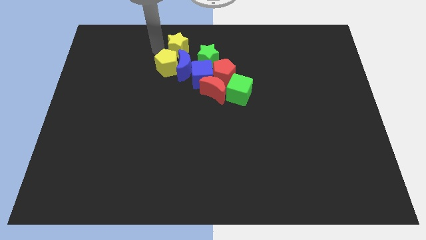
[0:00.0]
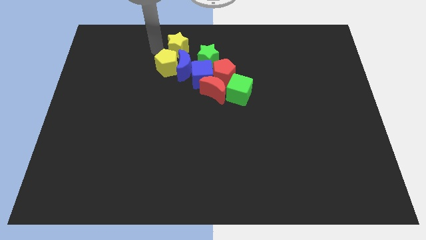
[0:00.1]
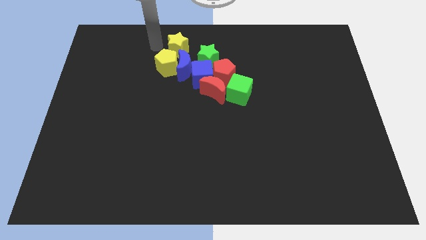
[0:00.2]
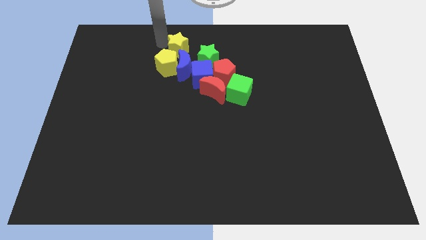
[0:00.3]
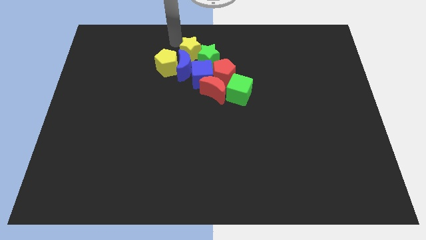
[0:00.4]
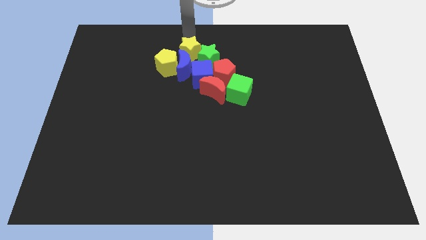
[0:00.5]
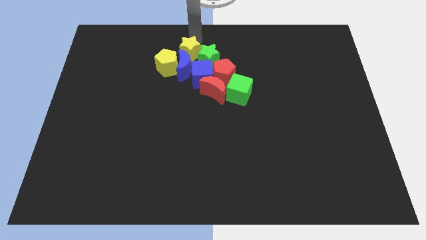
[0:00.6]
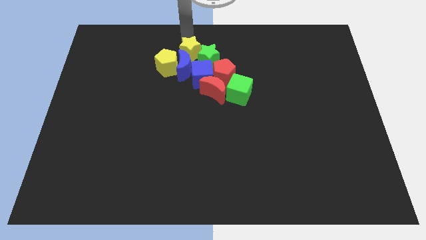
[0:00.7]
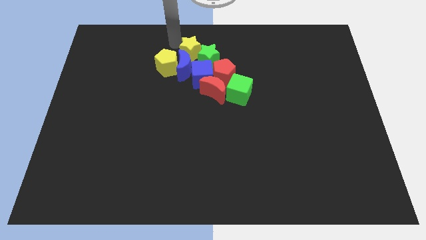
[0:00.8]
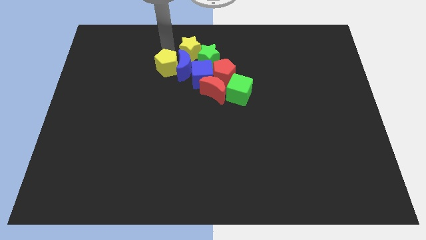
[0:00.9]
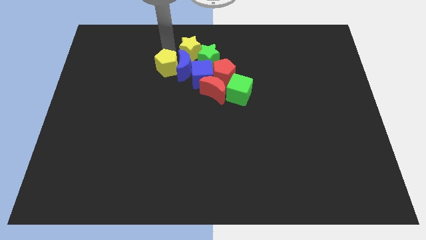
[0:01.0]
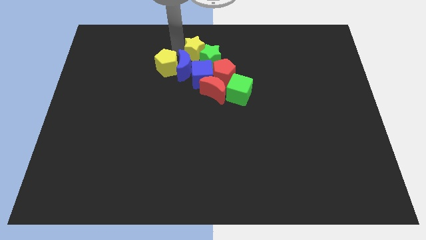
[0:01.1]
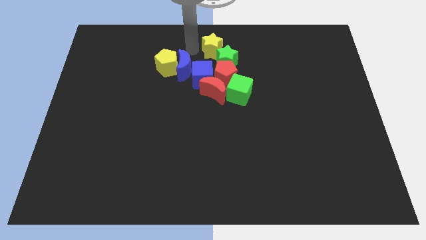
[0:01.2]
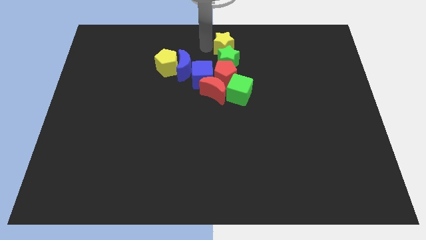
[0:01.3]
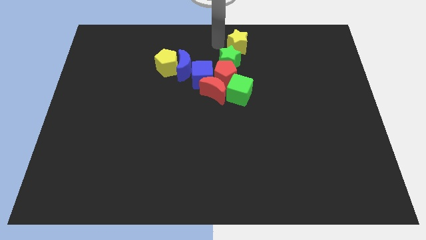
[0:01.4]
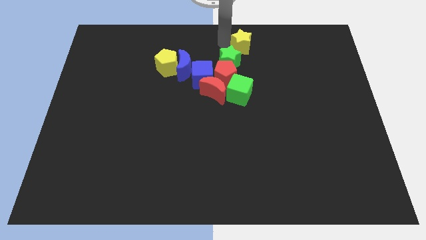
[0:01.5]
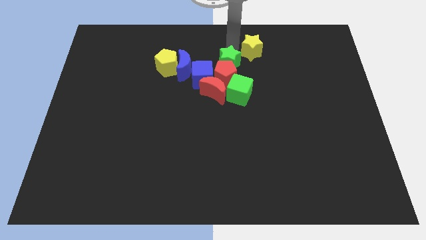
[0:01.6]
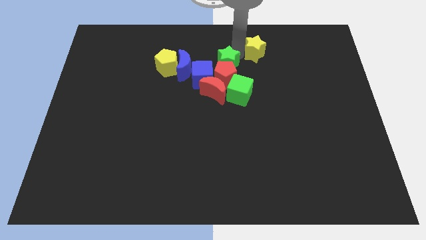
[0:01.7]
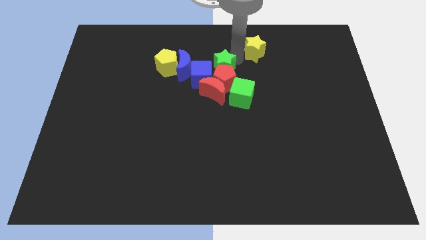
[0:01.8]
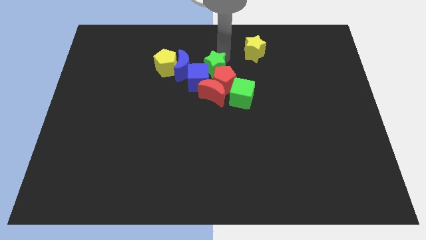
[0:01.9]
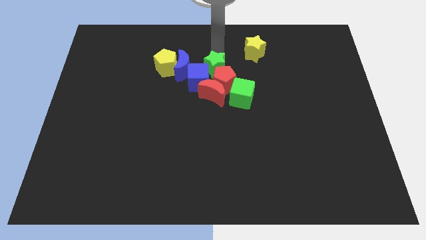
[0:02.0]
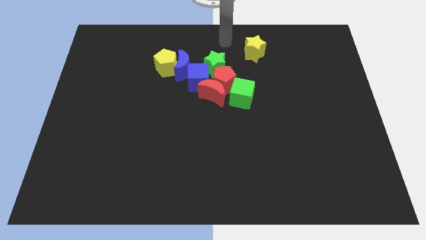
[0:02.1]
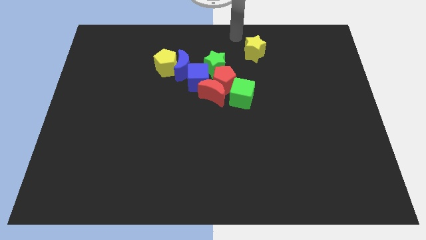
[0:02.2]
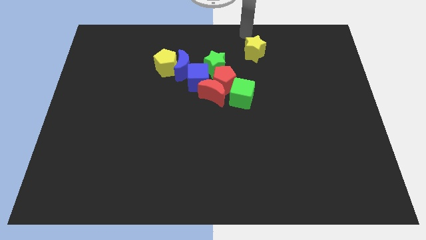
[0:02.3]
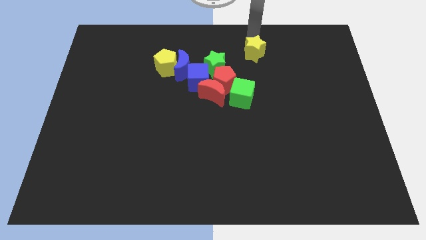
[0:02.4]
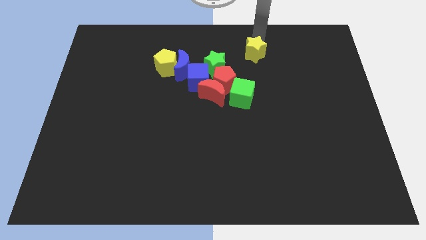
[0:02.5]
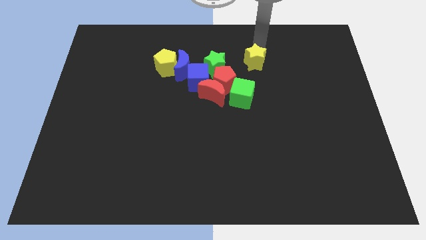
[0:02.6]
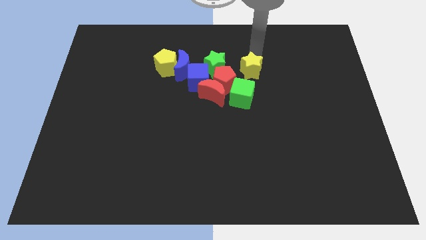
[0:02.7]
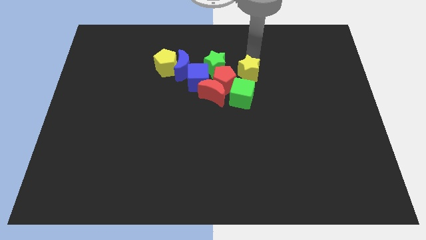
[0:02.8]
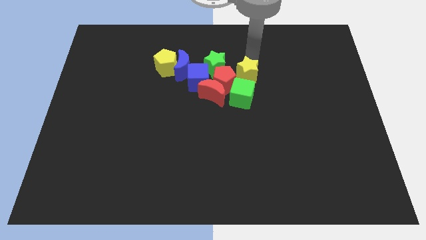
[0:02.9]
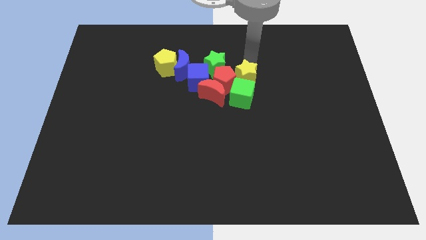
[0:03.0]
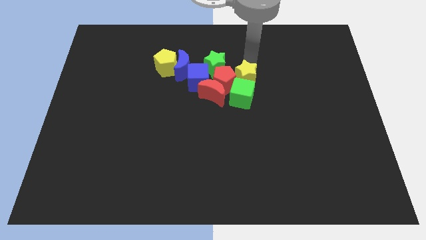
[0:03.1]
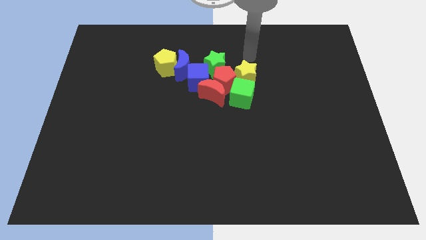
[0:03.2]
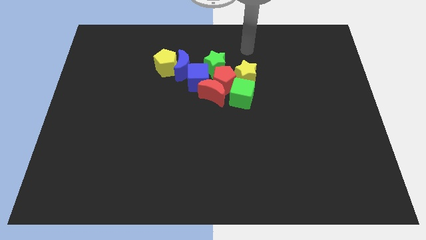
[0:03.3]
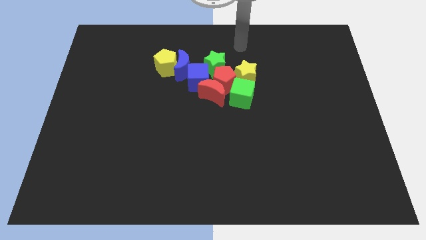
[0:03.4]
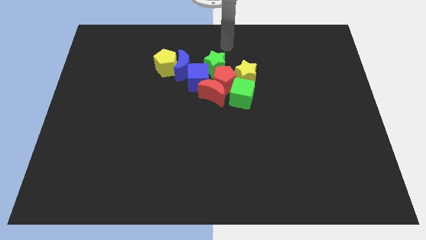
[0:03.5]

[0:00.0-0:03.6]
place the yellow star to the top of the green cube

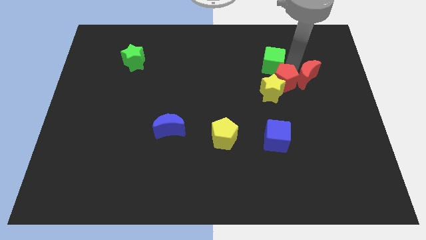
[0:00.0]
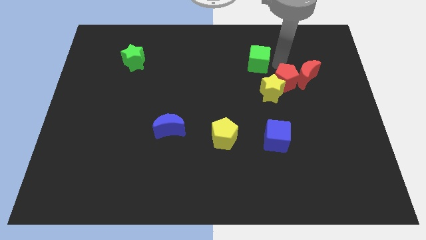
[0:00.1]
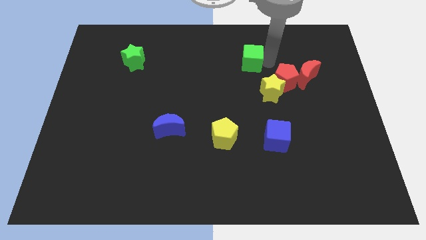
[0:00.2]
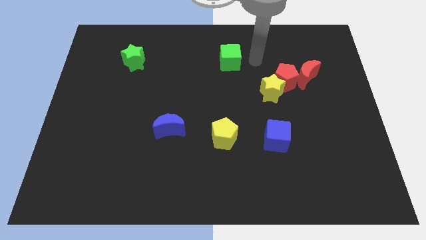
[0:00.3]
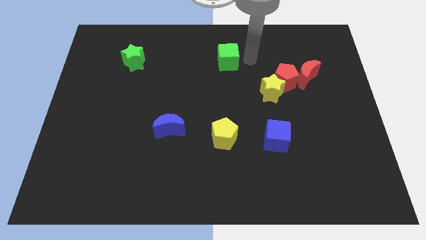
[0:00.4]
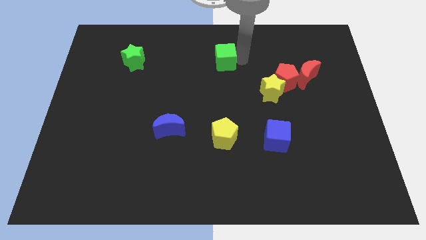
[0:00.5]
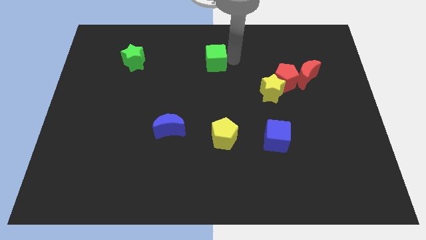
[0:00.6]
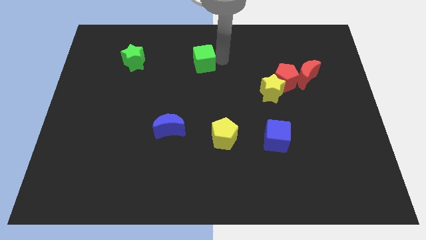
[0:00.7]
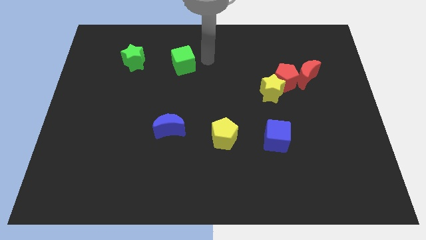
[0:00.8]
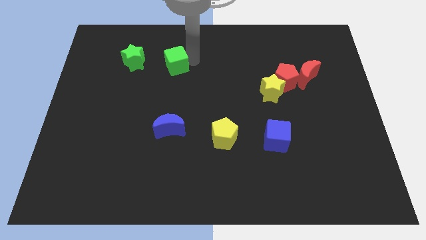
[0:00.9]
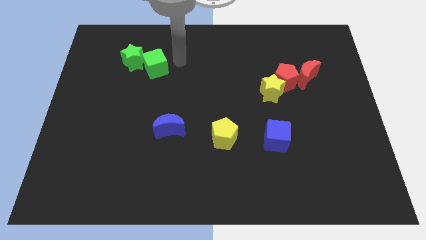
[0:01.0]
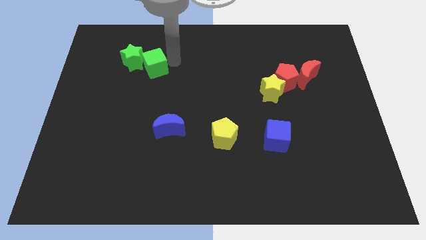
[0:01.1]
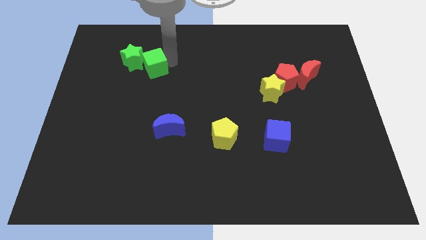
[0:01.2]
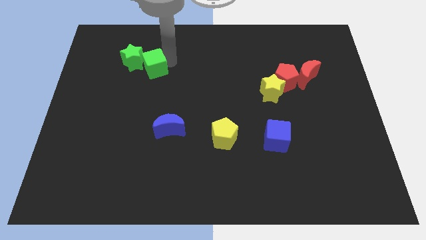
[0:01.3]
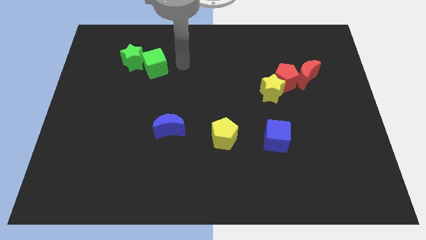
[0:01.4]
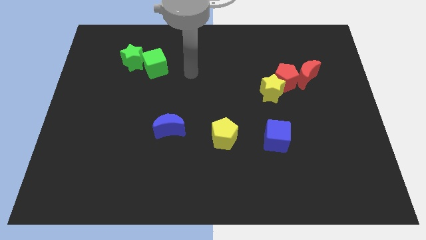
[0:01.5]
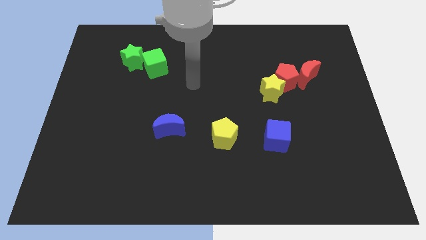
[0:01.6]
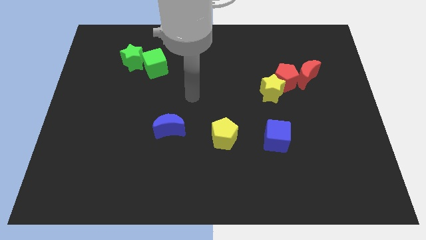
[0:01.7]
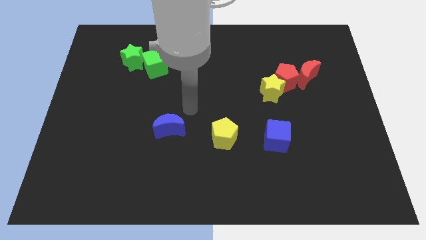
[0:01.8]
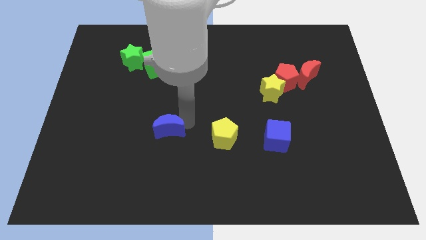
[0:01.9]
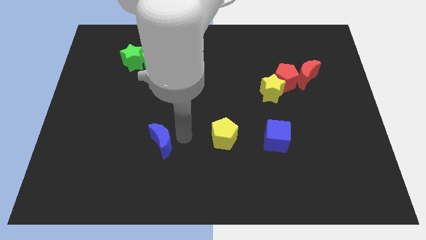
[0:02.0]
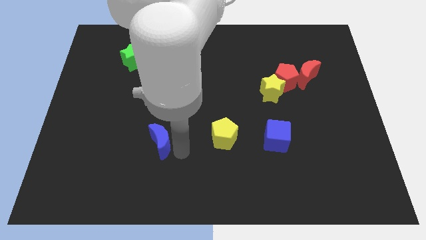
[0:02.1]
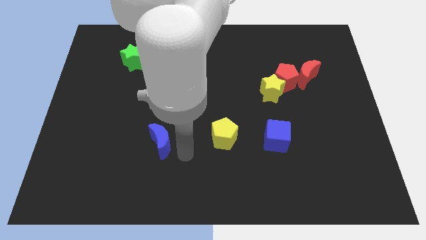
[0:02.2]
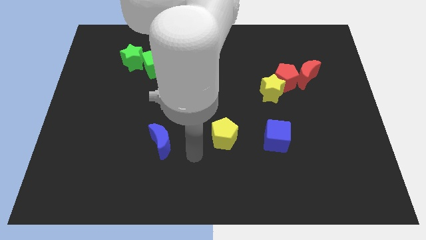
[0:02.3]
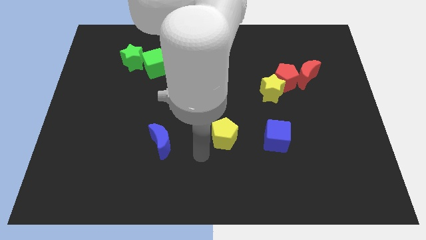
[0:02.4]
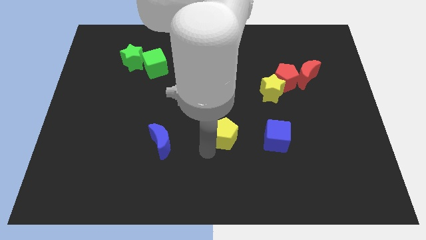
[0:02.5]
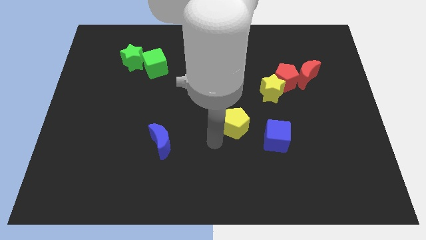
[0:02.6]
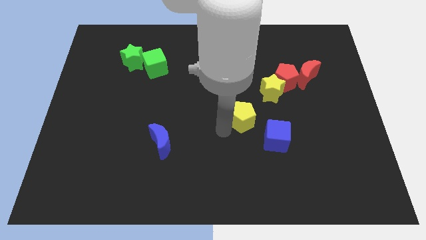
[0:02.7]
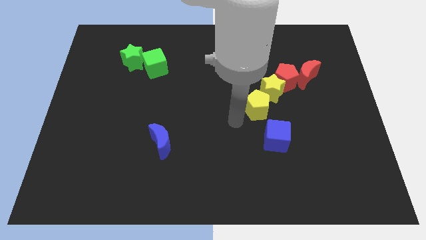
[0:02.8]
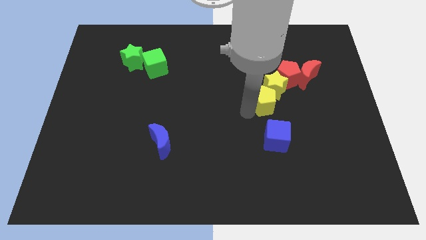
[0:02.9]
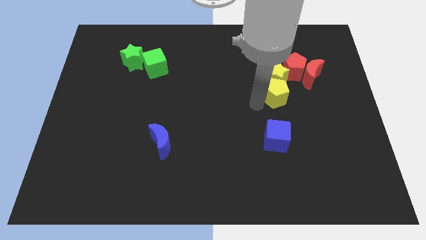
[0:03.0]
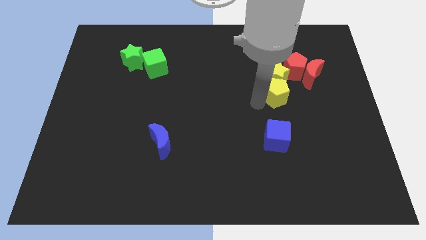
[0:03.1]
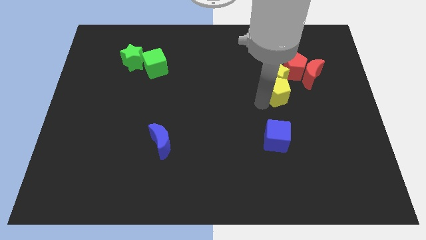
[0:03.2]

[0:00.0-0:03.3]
push the green cube to the left

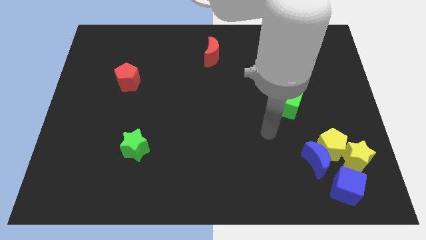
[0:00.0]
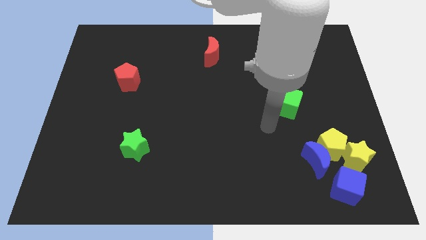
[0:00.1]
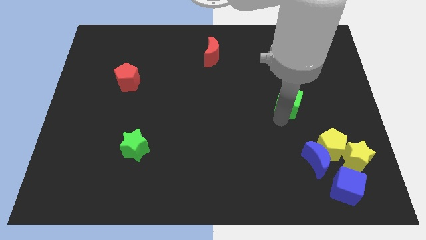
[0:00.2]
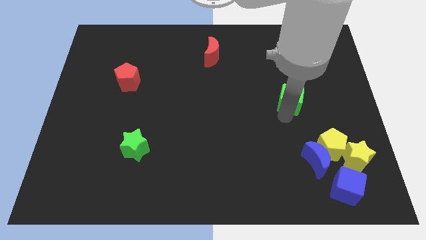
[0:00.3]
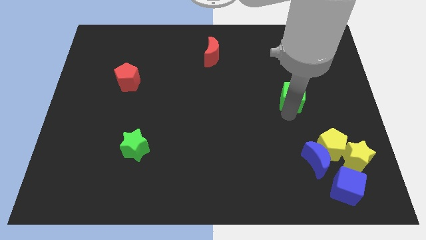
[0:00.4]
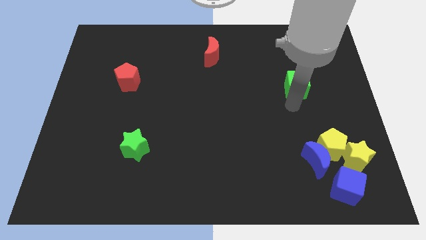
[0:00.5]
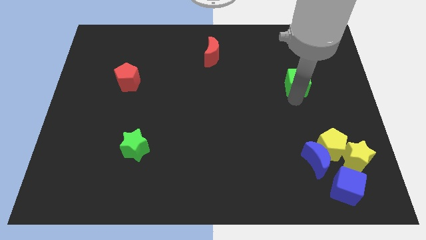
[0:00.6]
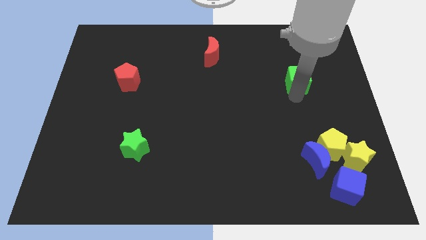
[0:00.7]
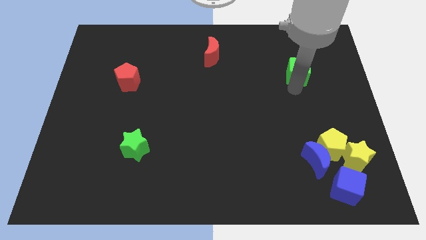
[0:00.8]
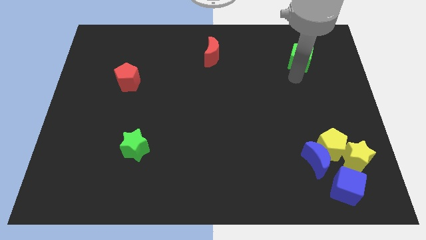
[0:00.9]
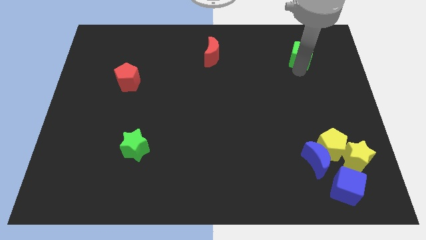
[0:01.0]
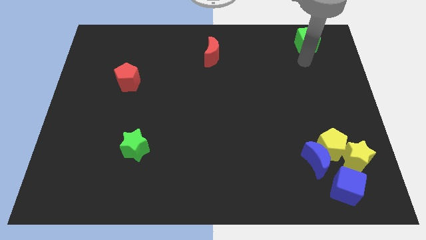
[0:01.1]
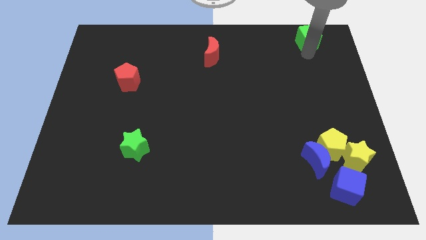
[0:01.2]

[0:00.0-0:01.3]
move the green cube towards the top right side of the board

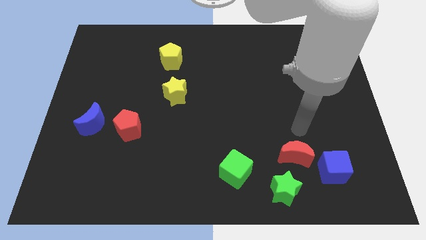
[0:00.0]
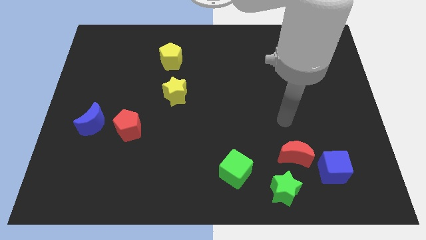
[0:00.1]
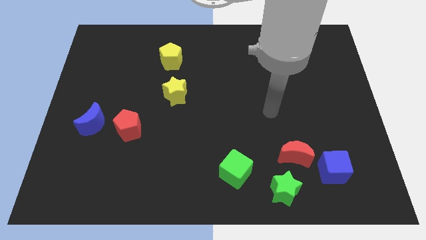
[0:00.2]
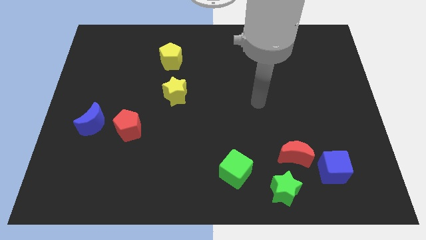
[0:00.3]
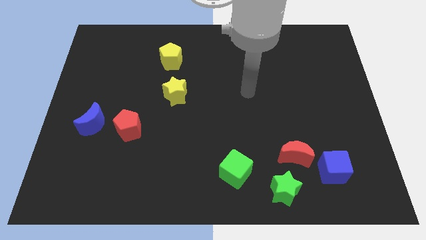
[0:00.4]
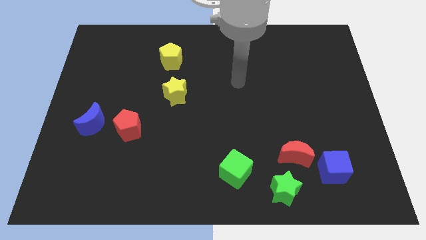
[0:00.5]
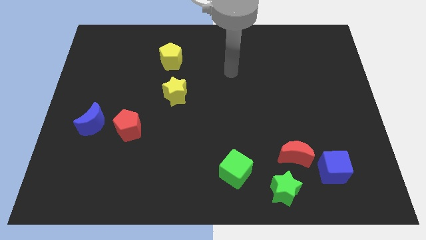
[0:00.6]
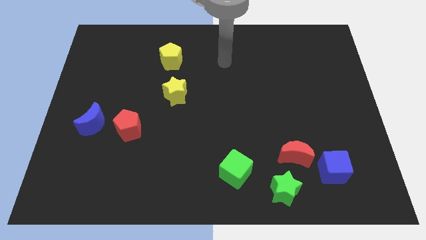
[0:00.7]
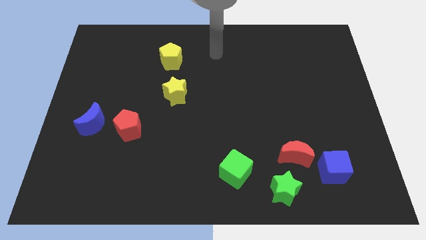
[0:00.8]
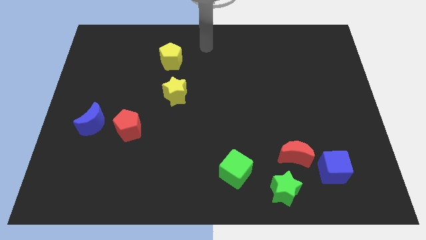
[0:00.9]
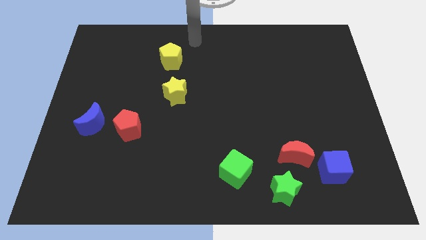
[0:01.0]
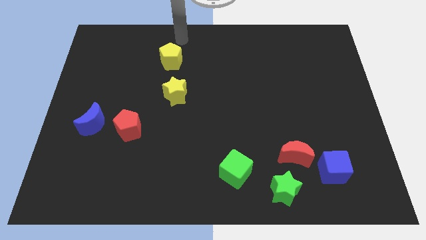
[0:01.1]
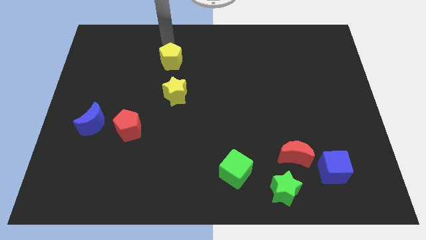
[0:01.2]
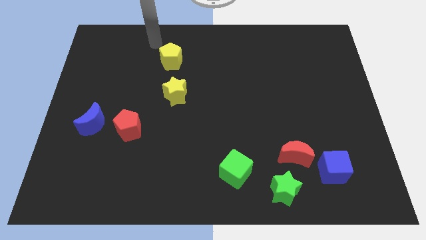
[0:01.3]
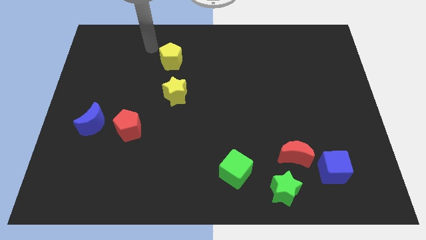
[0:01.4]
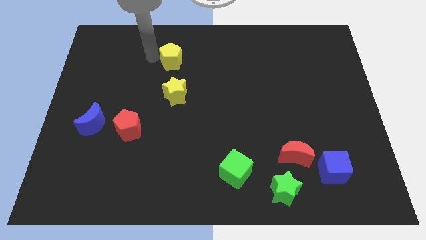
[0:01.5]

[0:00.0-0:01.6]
move the arm to the left of the yellow pentagon
